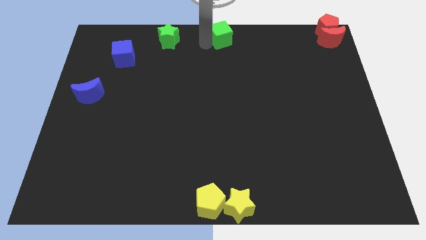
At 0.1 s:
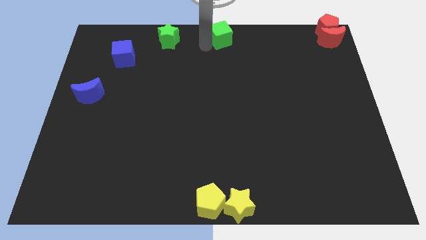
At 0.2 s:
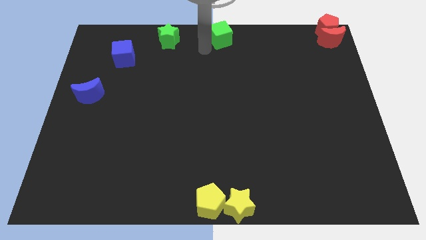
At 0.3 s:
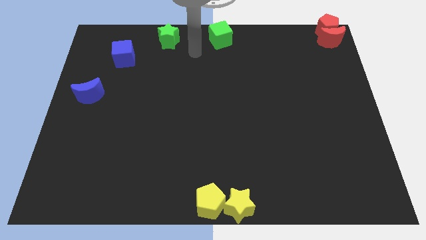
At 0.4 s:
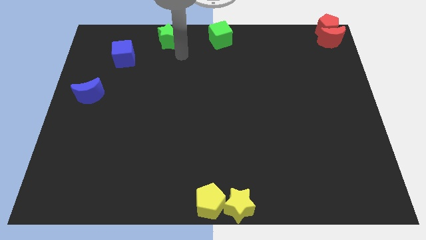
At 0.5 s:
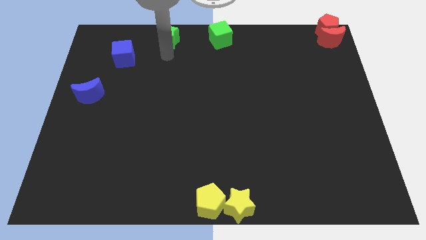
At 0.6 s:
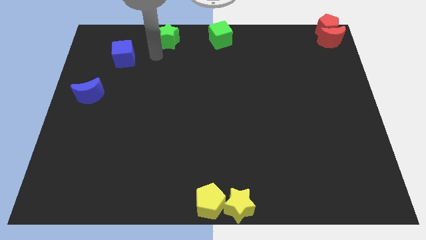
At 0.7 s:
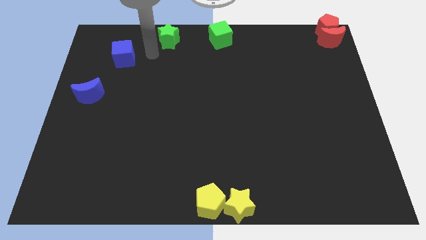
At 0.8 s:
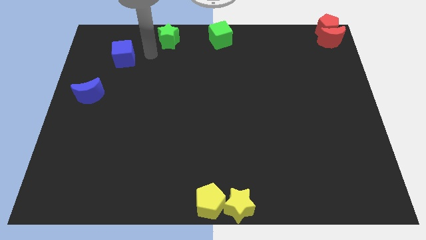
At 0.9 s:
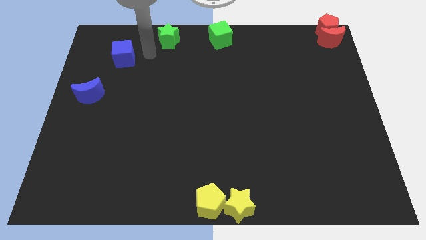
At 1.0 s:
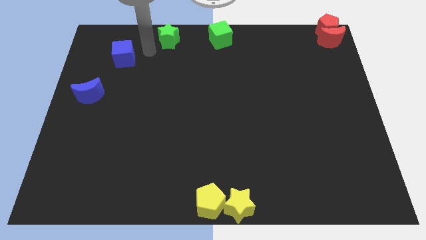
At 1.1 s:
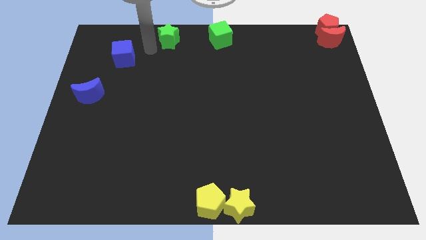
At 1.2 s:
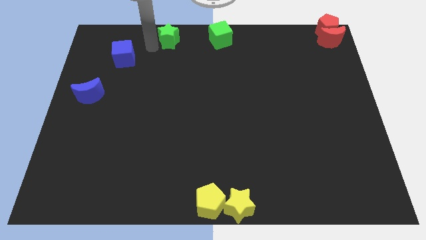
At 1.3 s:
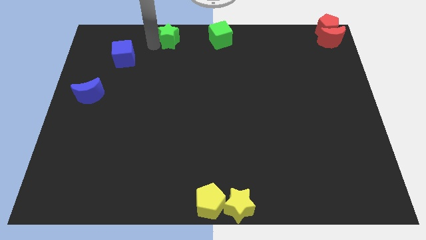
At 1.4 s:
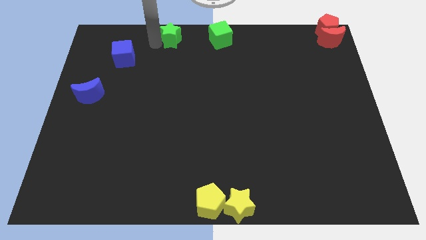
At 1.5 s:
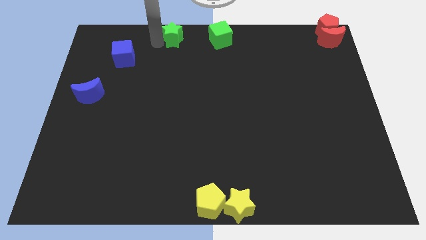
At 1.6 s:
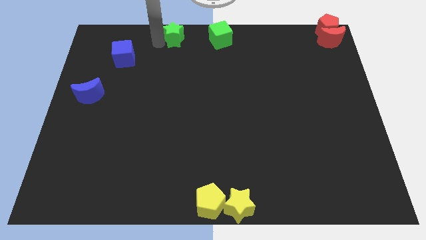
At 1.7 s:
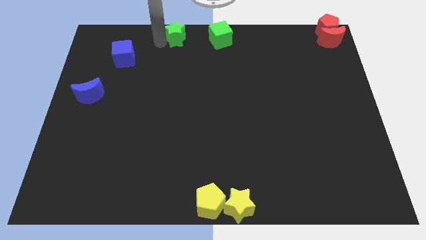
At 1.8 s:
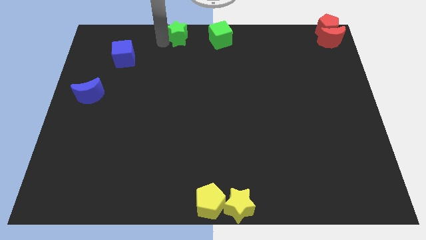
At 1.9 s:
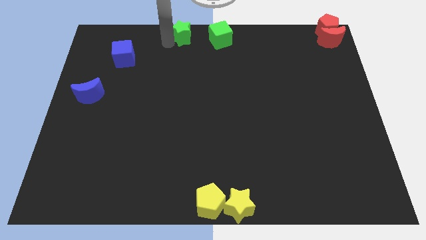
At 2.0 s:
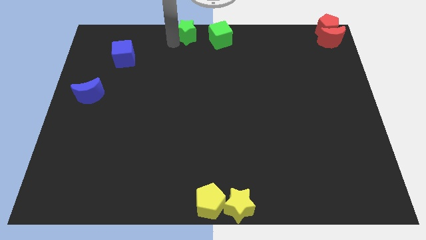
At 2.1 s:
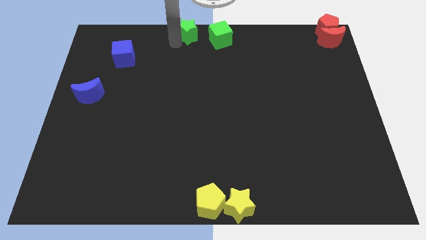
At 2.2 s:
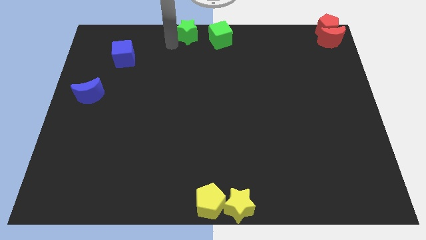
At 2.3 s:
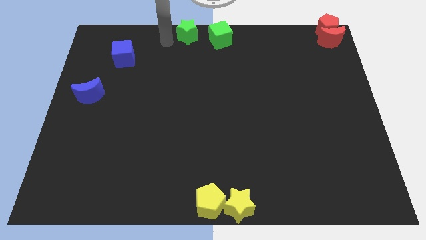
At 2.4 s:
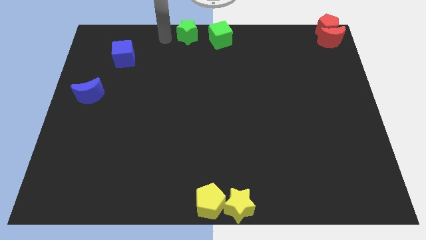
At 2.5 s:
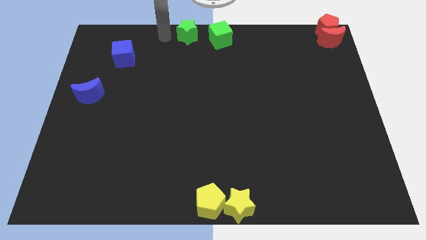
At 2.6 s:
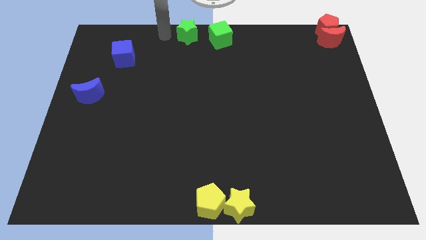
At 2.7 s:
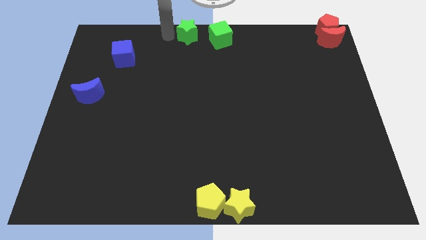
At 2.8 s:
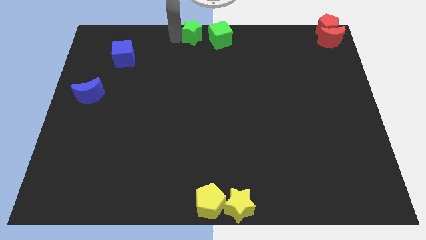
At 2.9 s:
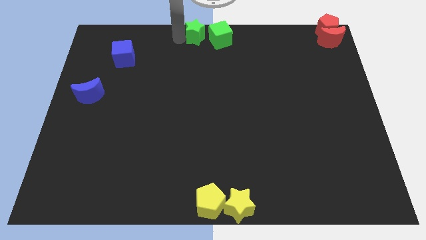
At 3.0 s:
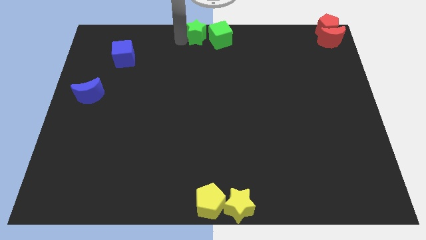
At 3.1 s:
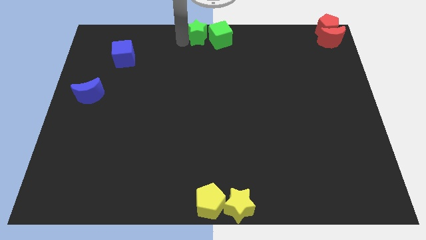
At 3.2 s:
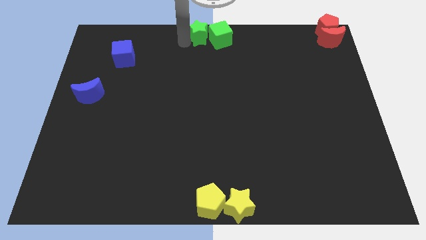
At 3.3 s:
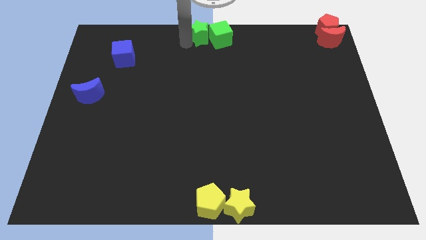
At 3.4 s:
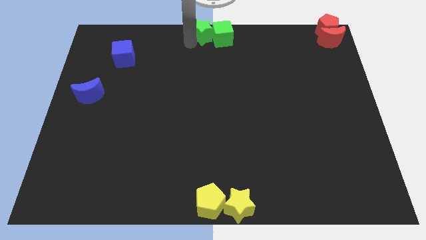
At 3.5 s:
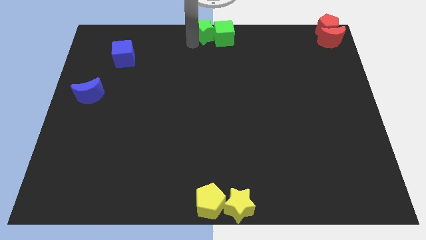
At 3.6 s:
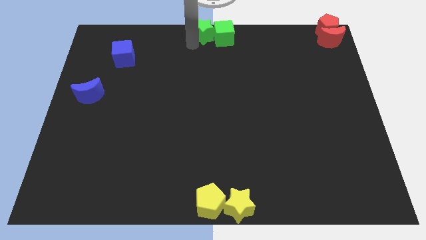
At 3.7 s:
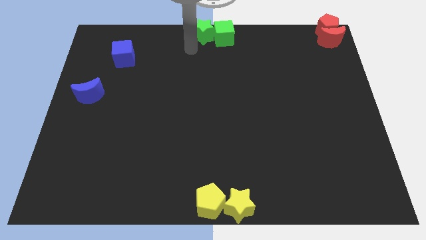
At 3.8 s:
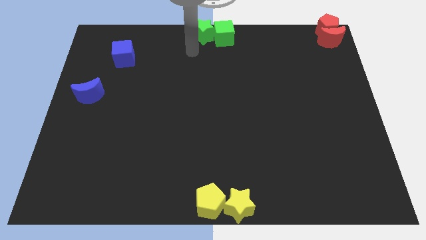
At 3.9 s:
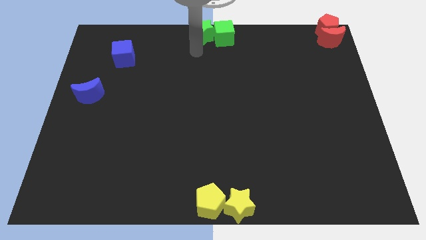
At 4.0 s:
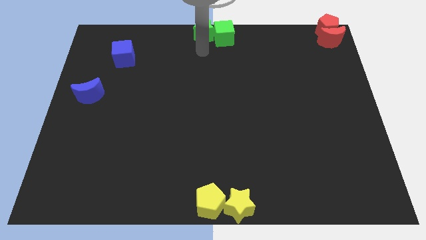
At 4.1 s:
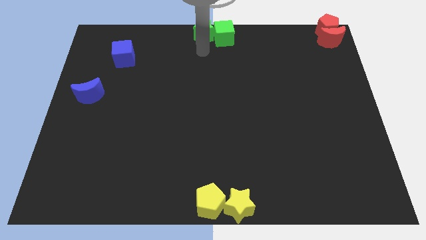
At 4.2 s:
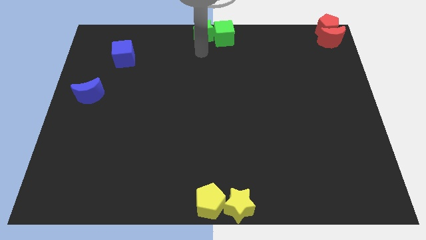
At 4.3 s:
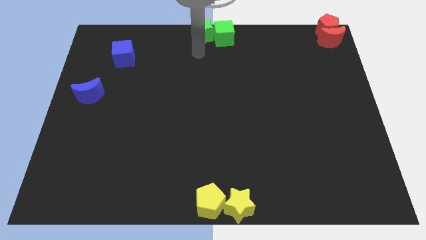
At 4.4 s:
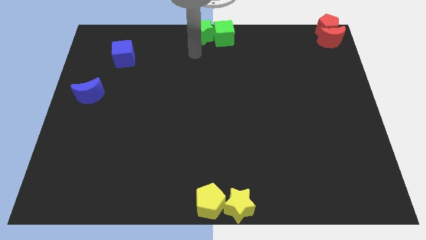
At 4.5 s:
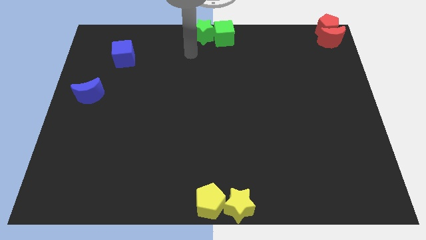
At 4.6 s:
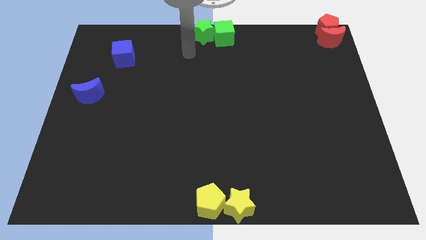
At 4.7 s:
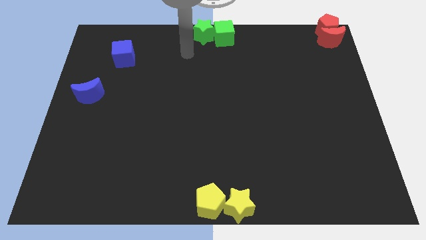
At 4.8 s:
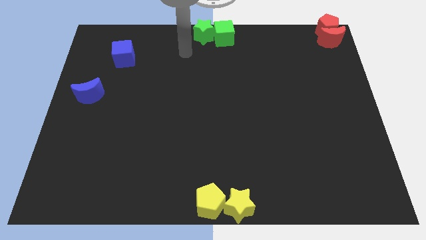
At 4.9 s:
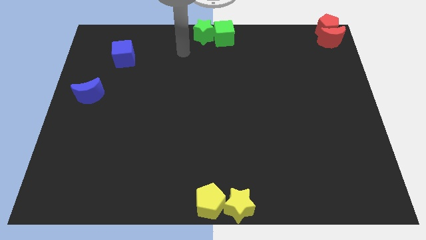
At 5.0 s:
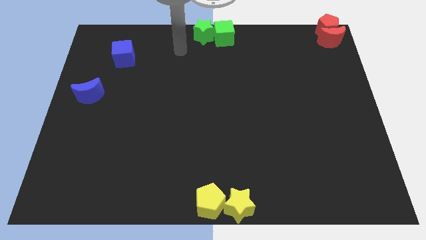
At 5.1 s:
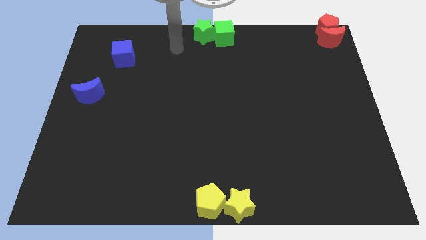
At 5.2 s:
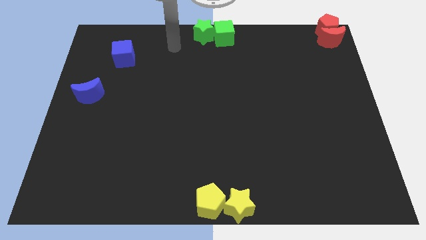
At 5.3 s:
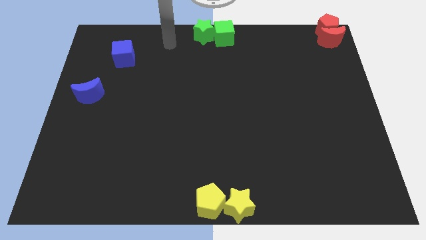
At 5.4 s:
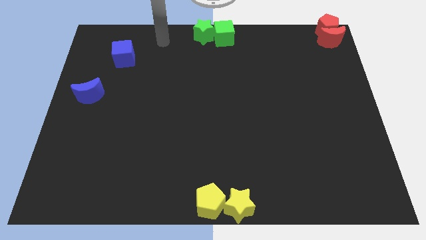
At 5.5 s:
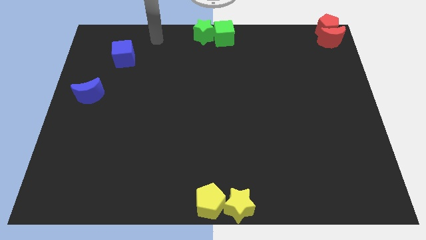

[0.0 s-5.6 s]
slide the green star into the green cube

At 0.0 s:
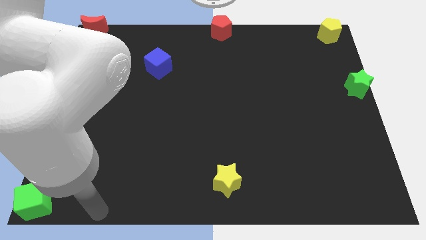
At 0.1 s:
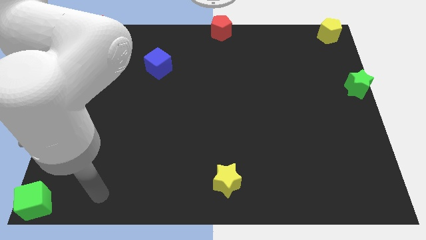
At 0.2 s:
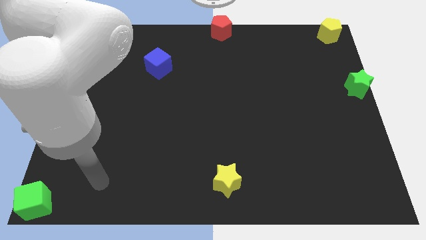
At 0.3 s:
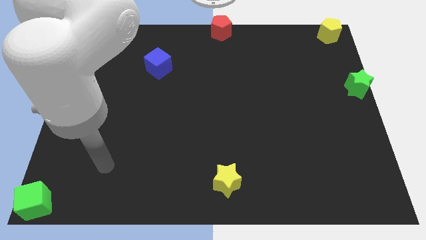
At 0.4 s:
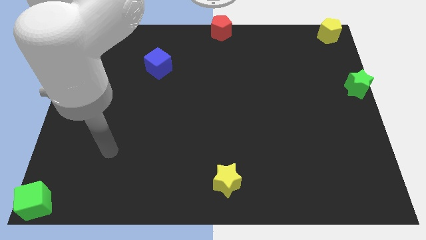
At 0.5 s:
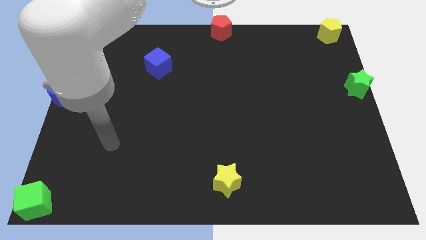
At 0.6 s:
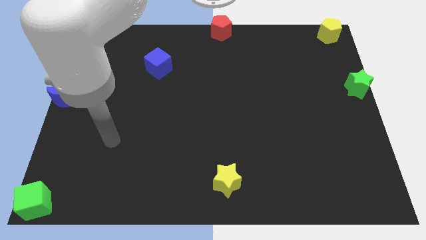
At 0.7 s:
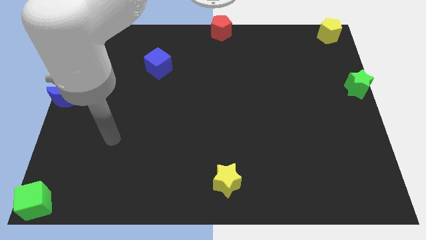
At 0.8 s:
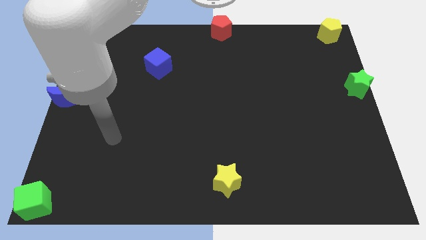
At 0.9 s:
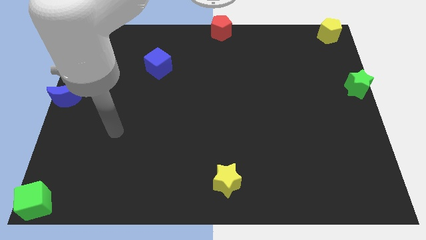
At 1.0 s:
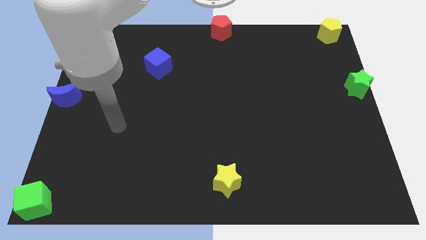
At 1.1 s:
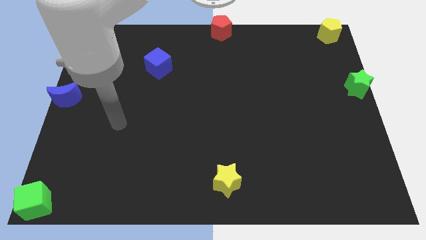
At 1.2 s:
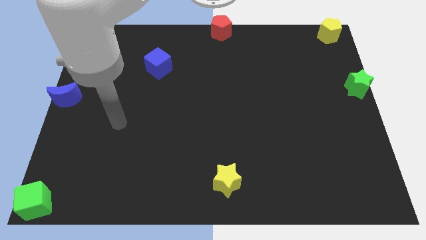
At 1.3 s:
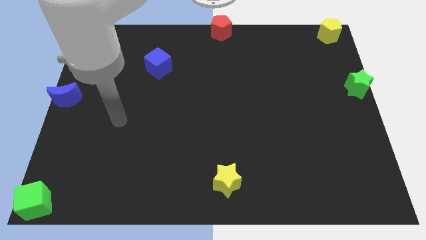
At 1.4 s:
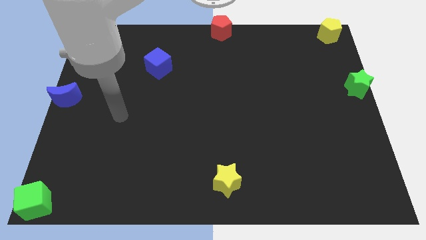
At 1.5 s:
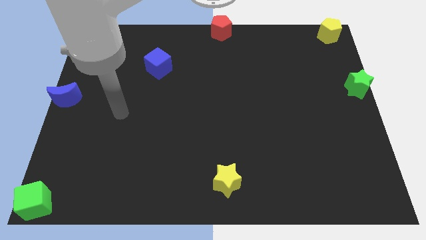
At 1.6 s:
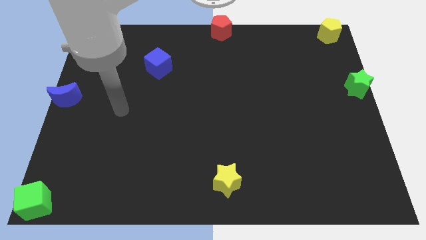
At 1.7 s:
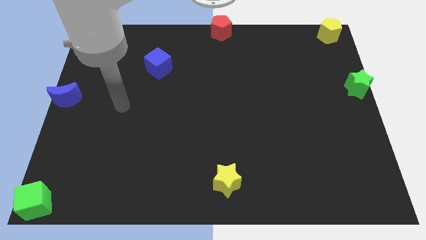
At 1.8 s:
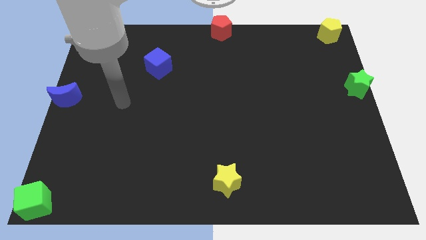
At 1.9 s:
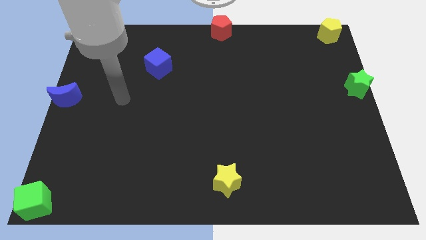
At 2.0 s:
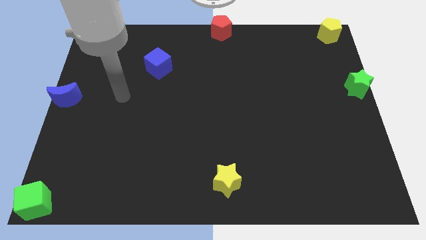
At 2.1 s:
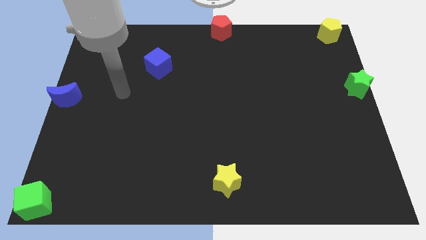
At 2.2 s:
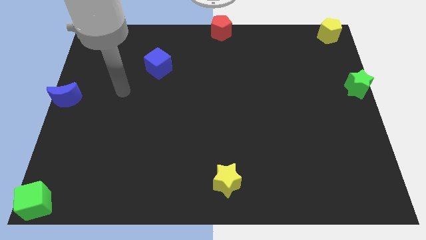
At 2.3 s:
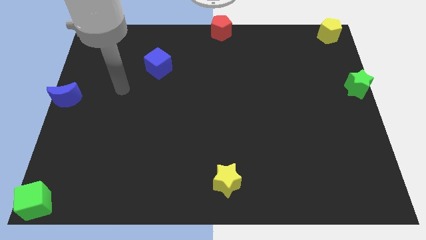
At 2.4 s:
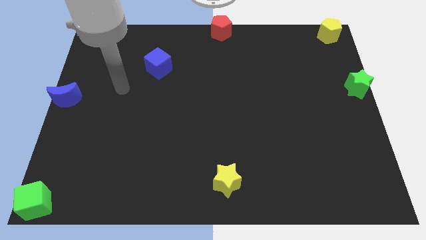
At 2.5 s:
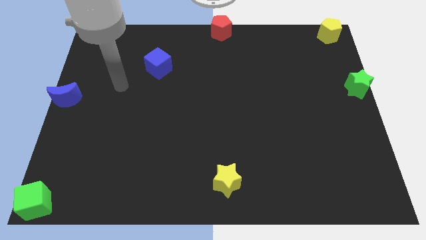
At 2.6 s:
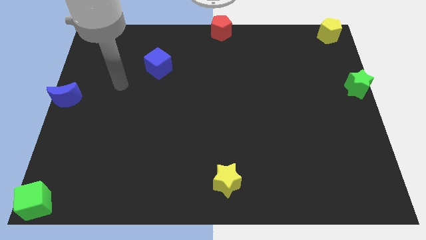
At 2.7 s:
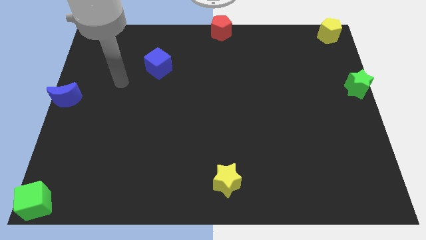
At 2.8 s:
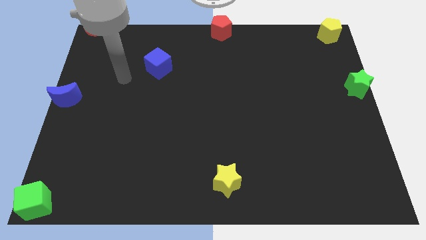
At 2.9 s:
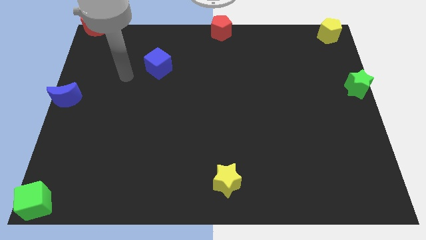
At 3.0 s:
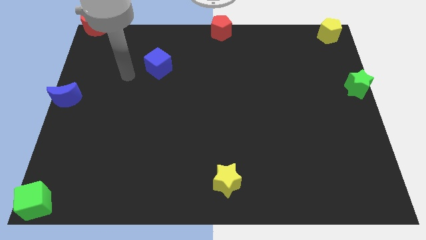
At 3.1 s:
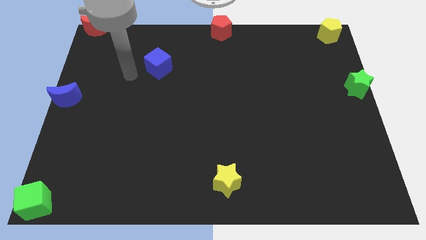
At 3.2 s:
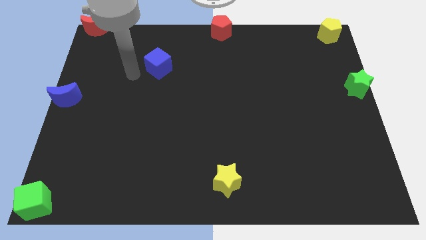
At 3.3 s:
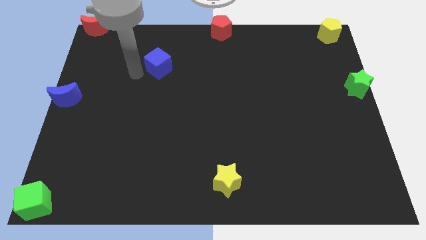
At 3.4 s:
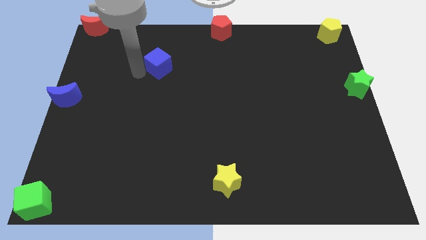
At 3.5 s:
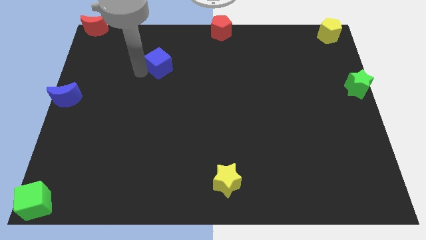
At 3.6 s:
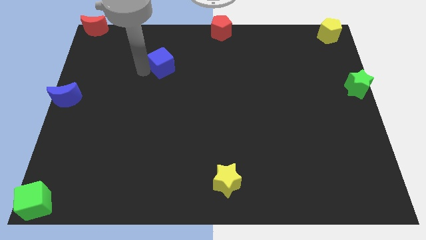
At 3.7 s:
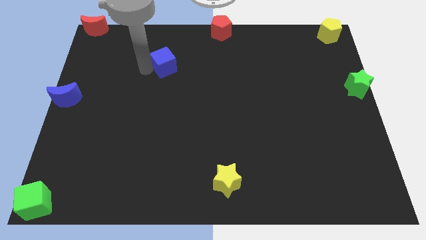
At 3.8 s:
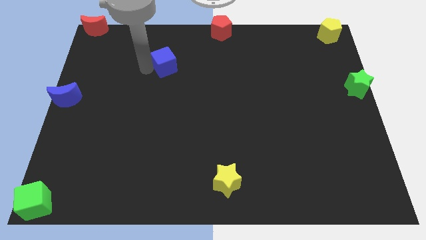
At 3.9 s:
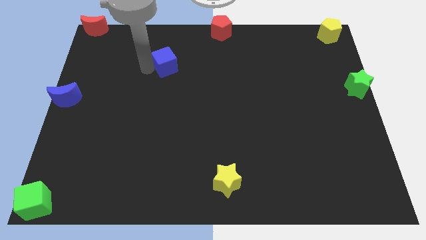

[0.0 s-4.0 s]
tap blue cube slightly
